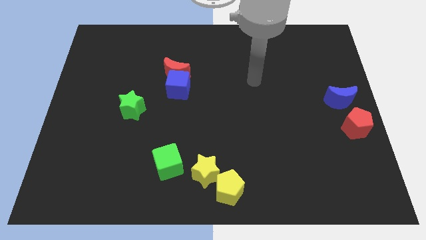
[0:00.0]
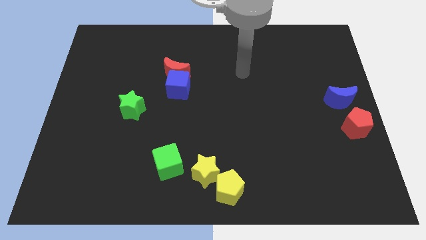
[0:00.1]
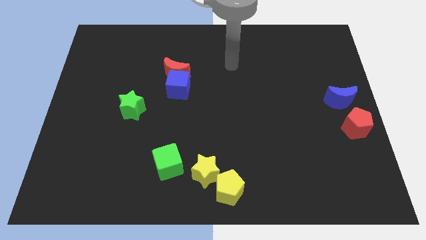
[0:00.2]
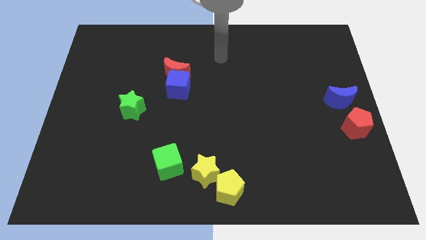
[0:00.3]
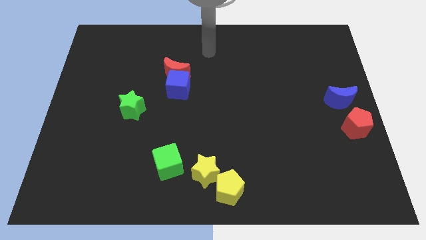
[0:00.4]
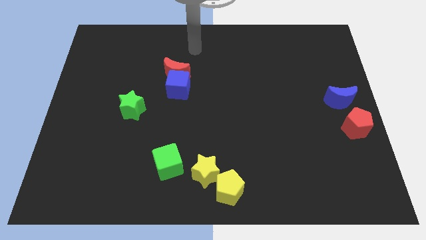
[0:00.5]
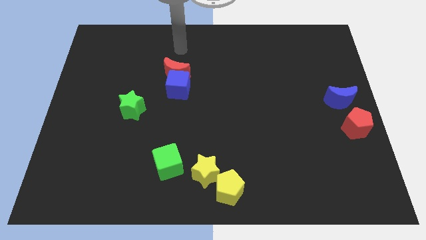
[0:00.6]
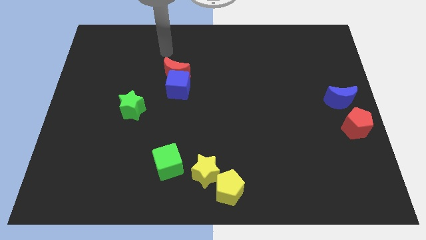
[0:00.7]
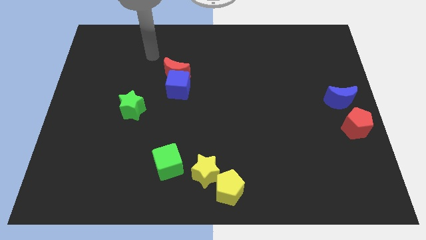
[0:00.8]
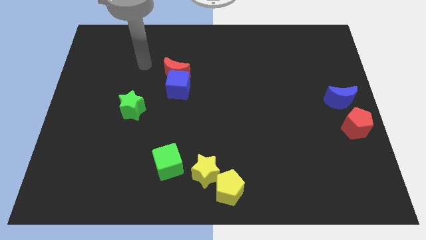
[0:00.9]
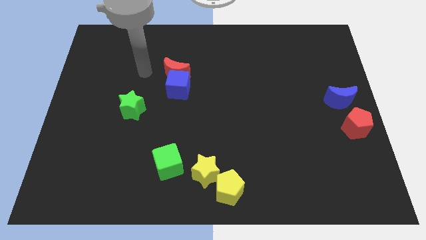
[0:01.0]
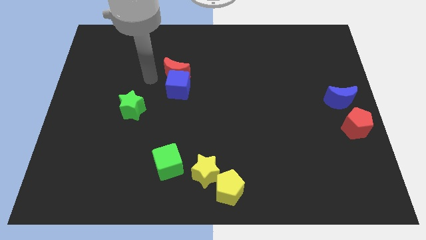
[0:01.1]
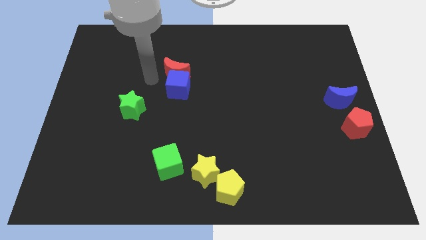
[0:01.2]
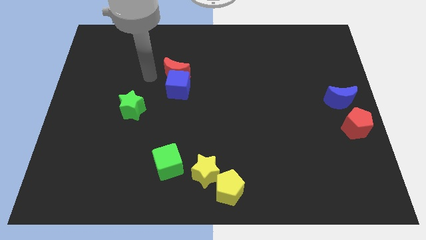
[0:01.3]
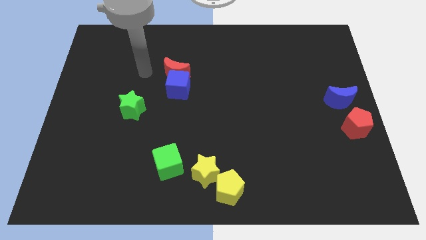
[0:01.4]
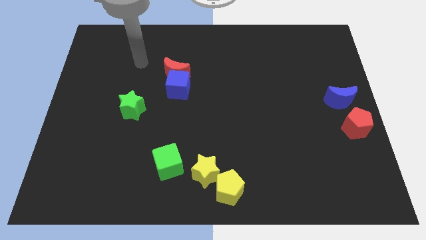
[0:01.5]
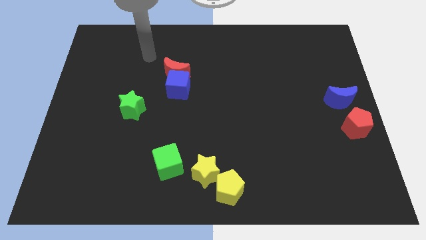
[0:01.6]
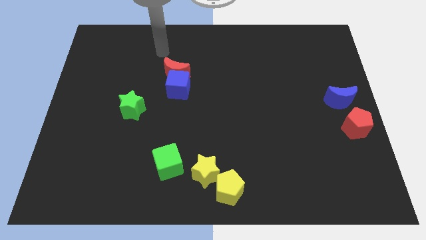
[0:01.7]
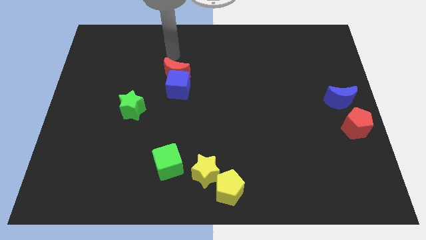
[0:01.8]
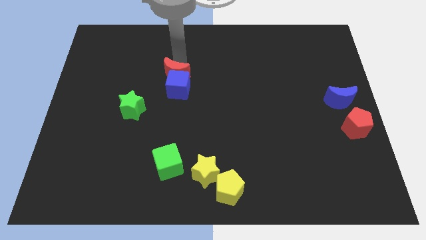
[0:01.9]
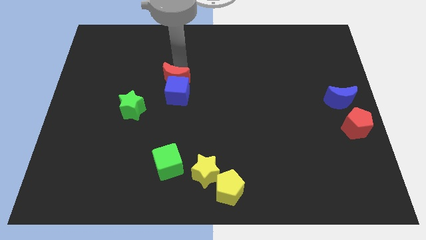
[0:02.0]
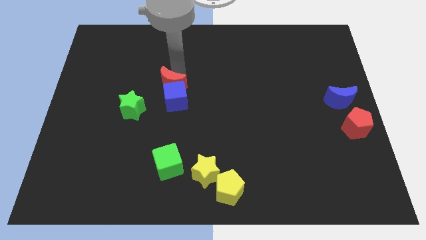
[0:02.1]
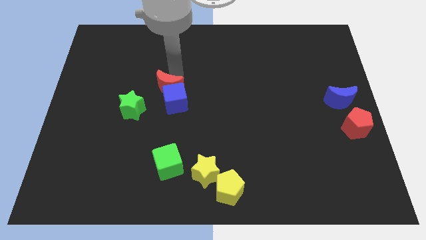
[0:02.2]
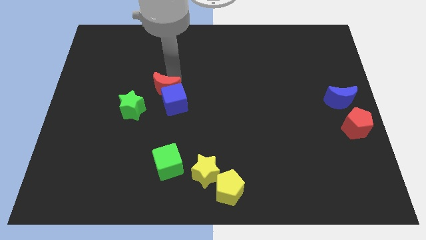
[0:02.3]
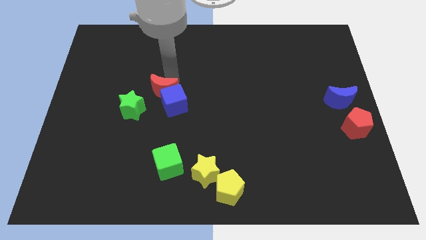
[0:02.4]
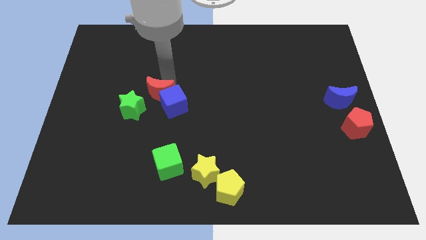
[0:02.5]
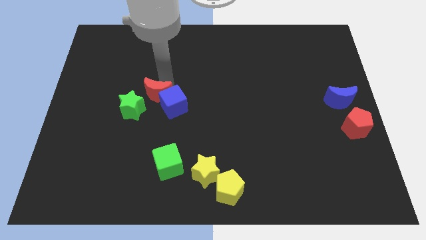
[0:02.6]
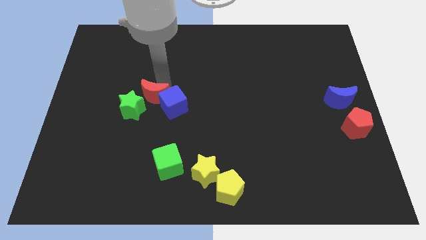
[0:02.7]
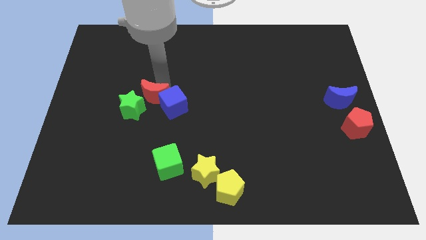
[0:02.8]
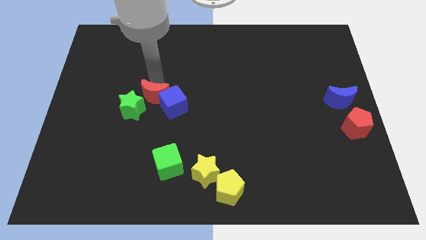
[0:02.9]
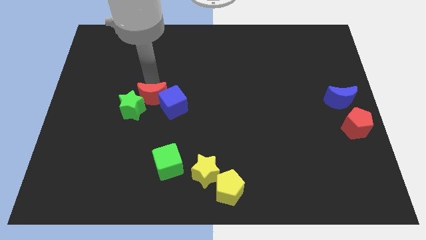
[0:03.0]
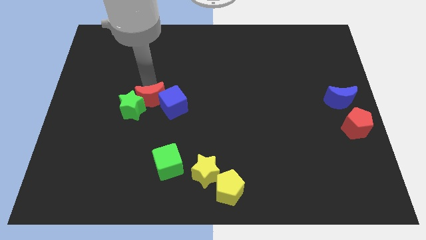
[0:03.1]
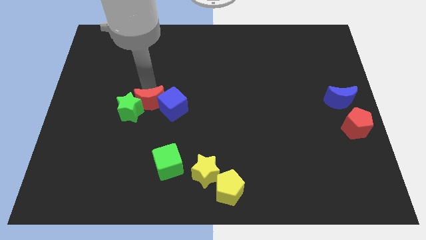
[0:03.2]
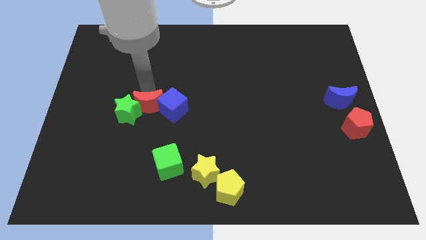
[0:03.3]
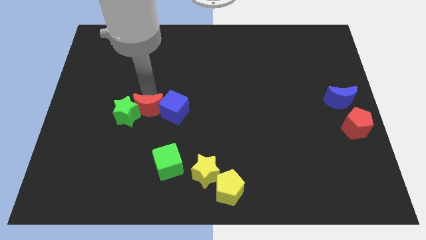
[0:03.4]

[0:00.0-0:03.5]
push the red crescent into the blue cube

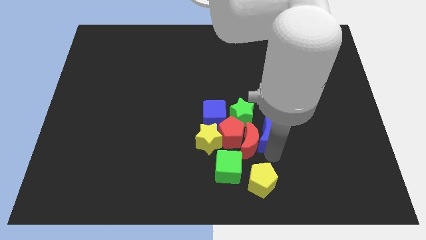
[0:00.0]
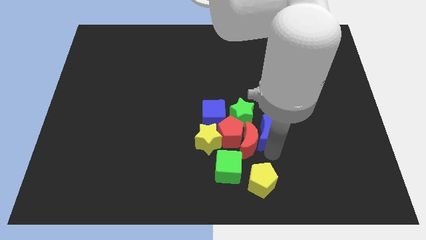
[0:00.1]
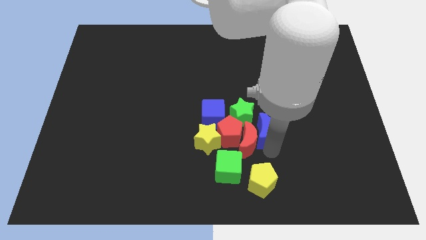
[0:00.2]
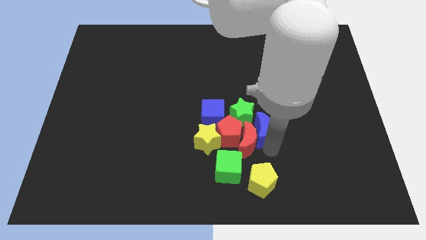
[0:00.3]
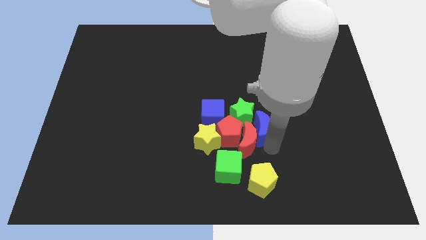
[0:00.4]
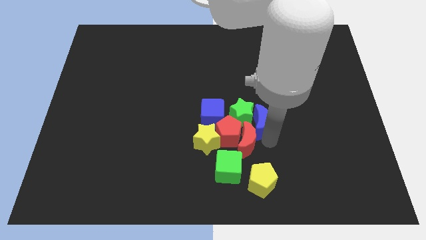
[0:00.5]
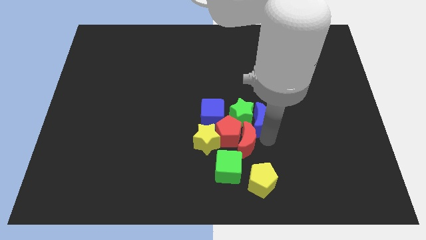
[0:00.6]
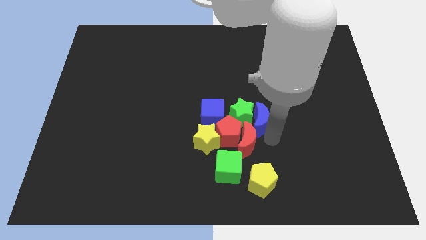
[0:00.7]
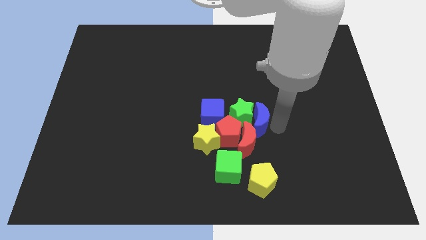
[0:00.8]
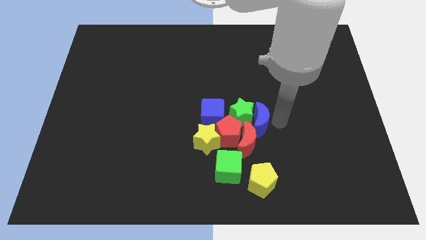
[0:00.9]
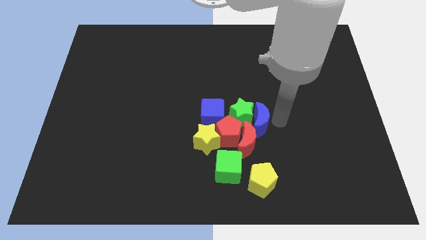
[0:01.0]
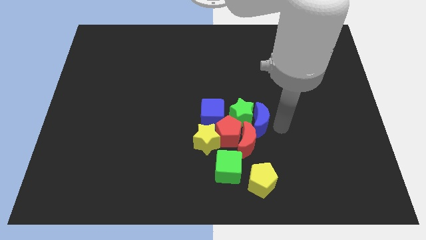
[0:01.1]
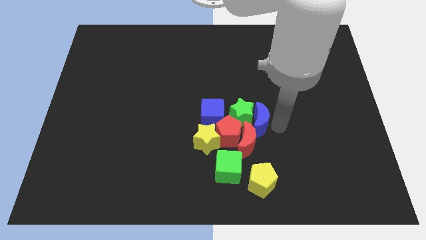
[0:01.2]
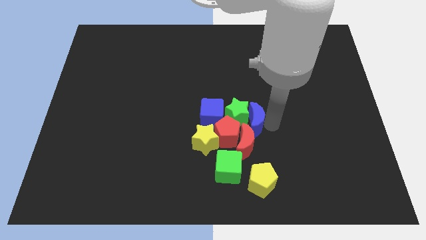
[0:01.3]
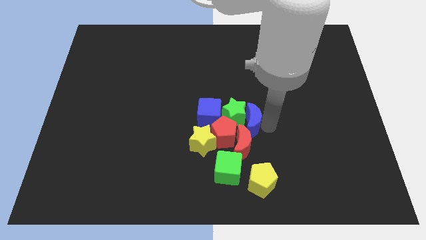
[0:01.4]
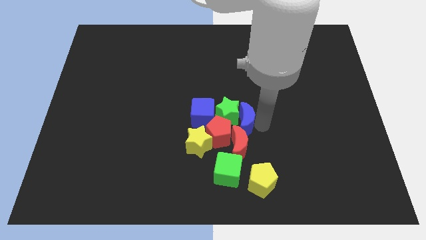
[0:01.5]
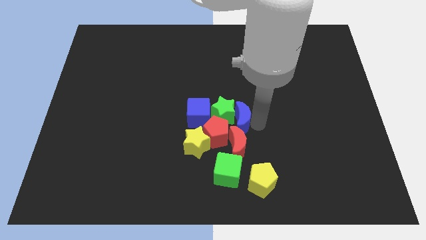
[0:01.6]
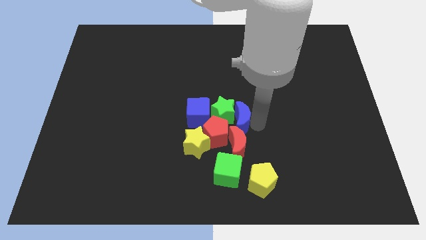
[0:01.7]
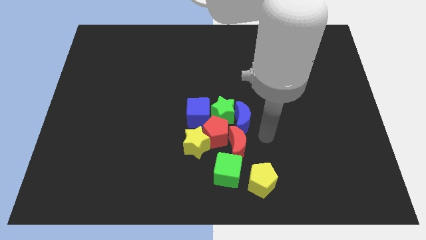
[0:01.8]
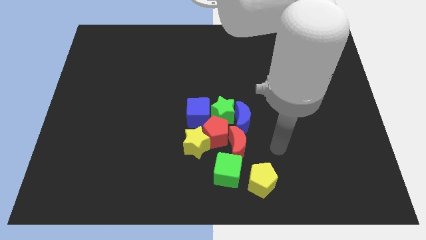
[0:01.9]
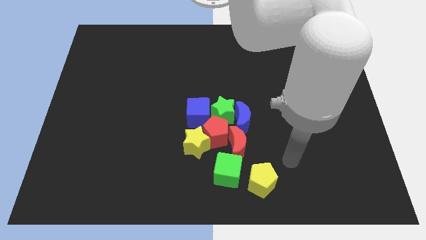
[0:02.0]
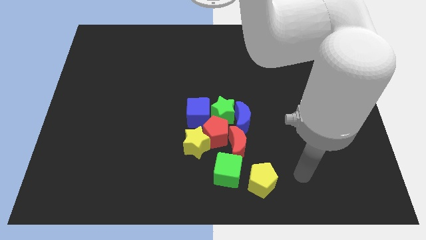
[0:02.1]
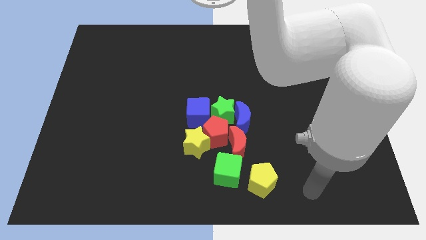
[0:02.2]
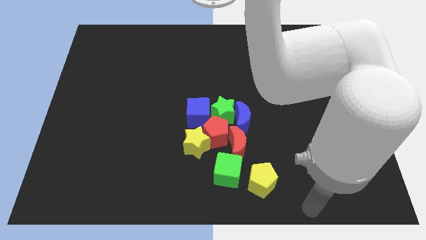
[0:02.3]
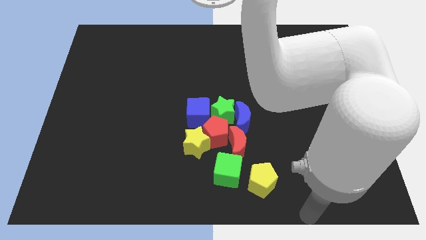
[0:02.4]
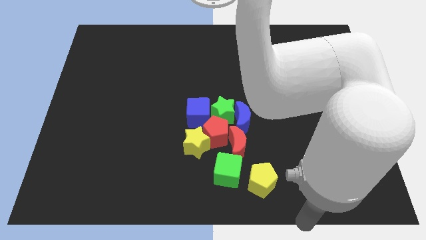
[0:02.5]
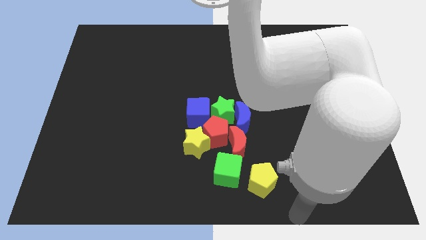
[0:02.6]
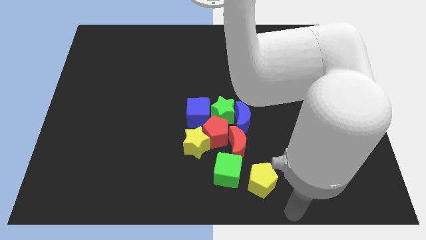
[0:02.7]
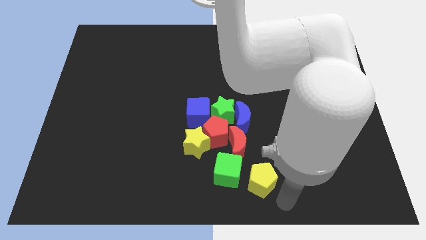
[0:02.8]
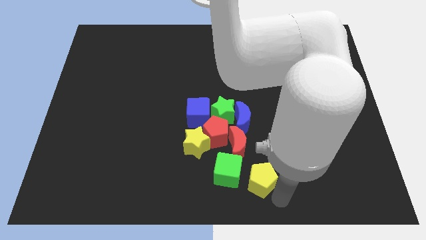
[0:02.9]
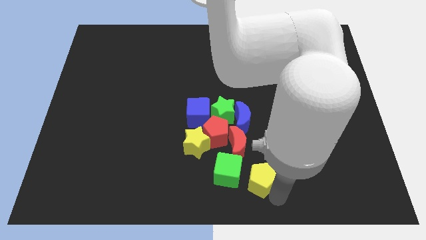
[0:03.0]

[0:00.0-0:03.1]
slide blue moon to the right of the green star

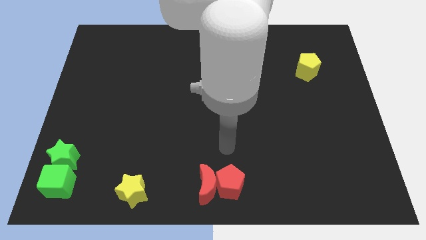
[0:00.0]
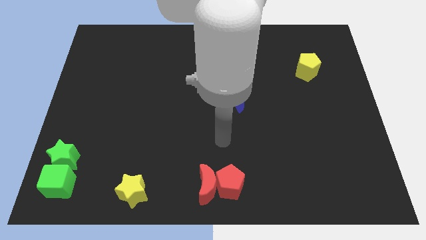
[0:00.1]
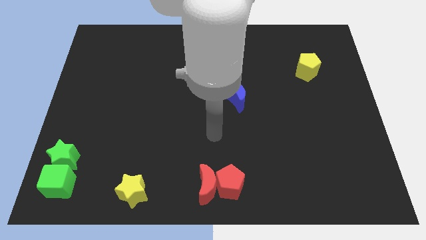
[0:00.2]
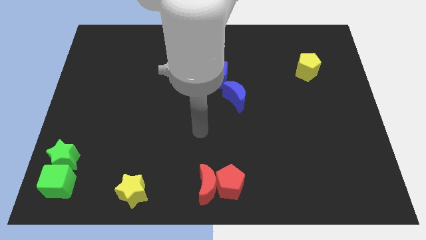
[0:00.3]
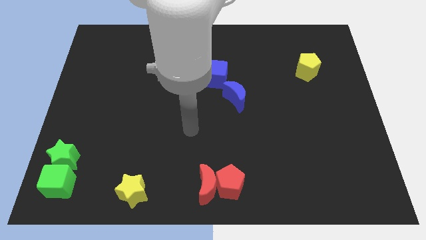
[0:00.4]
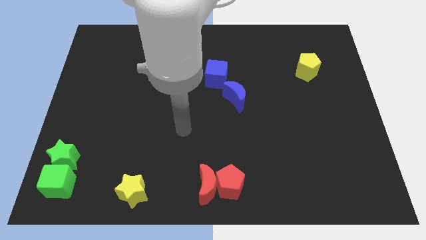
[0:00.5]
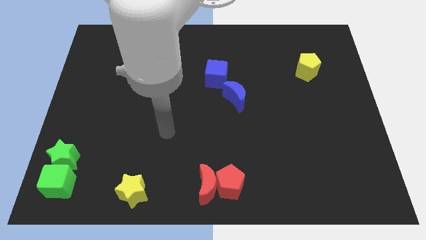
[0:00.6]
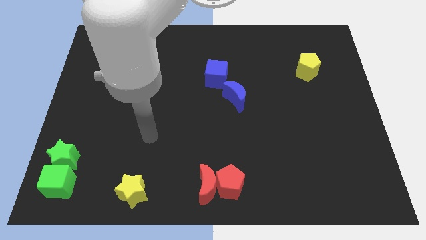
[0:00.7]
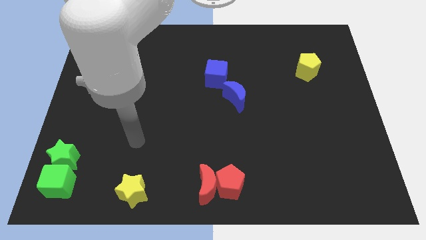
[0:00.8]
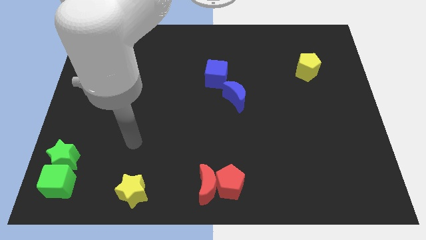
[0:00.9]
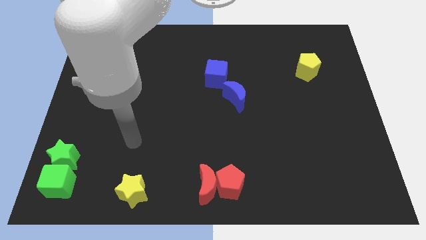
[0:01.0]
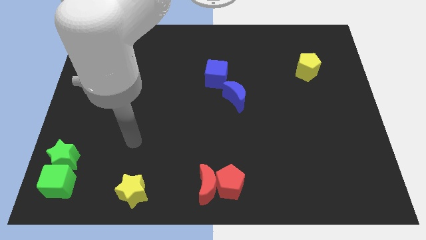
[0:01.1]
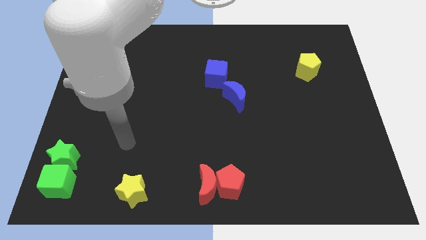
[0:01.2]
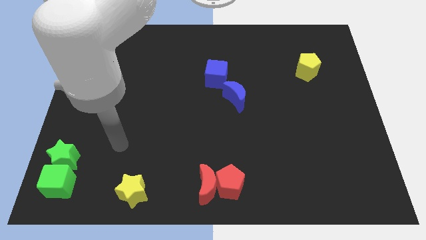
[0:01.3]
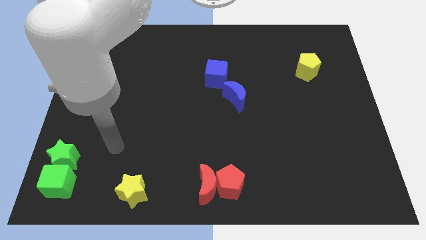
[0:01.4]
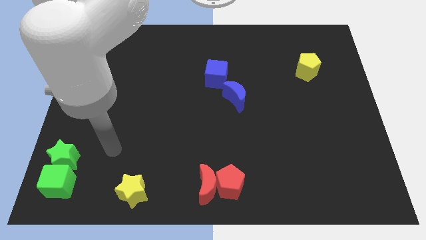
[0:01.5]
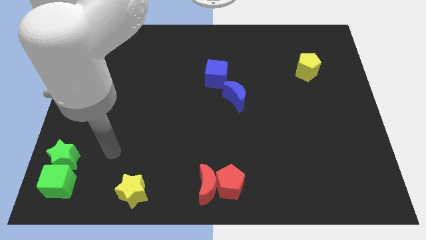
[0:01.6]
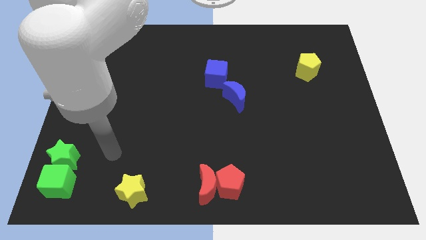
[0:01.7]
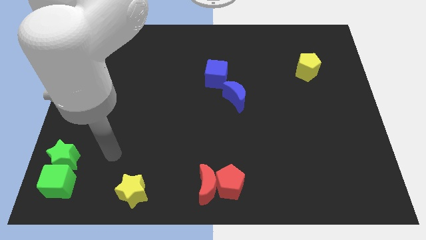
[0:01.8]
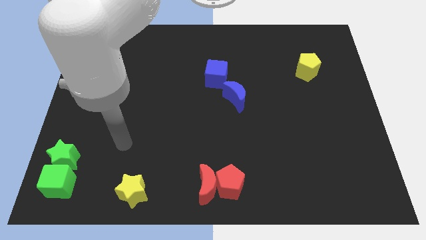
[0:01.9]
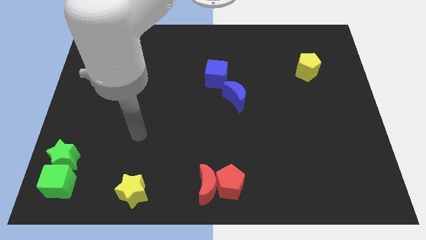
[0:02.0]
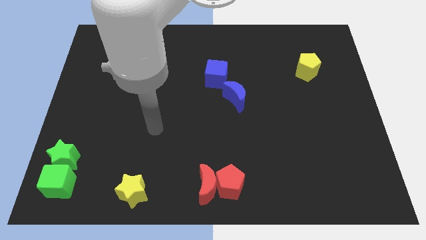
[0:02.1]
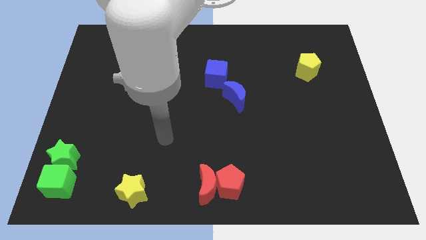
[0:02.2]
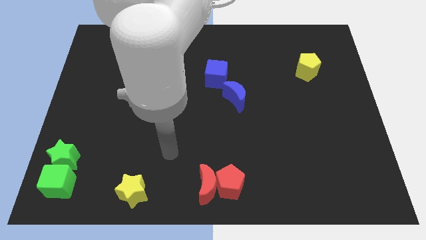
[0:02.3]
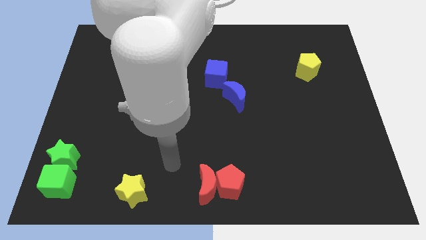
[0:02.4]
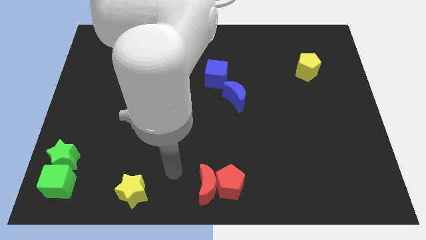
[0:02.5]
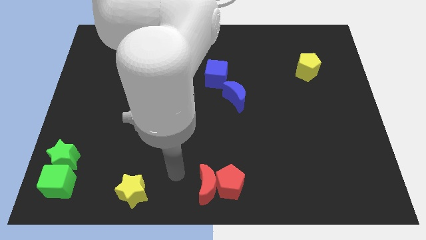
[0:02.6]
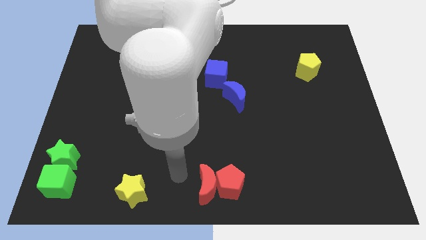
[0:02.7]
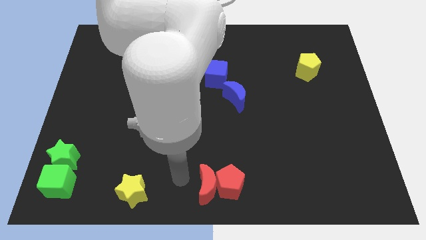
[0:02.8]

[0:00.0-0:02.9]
place your hand at left side of the red crescent
